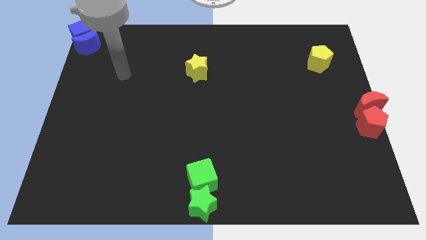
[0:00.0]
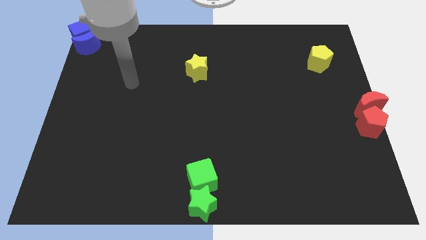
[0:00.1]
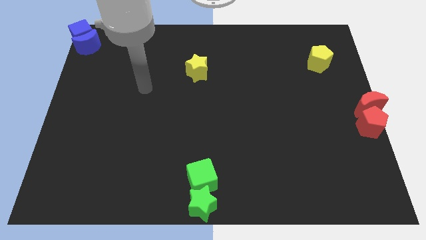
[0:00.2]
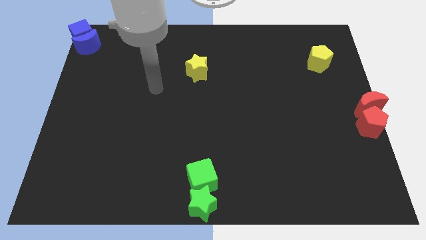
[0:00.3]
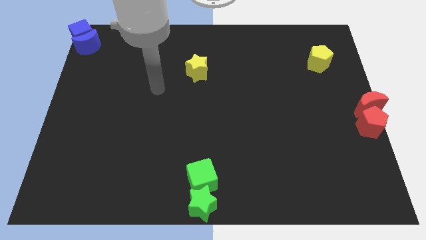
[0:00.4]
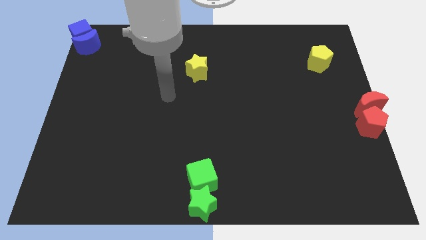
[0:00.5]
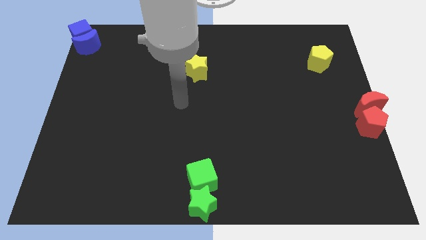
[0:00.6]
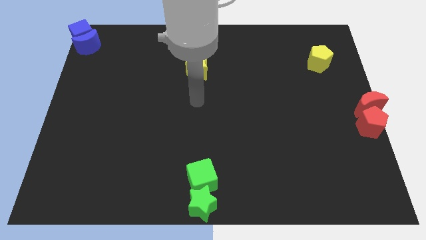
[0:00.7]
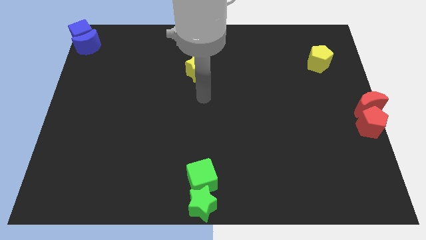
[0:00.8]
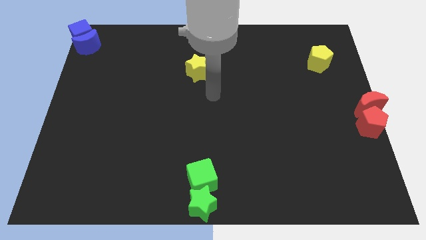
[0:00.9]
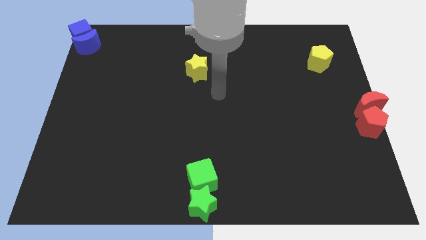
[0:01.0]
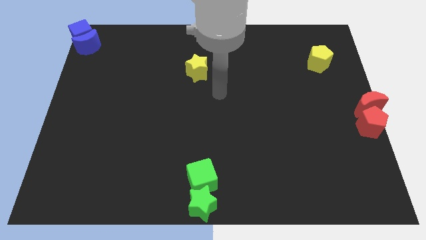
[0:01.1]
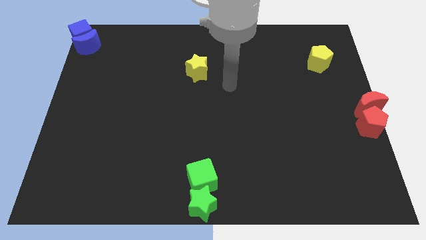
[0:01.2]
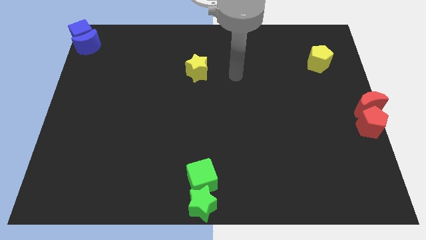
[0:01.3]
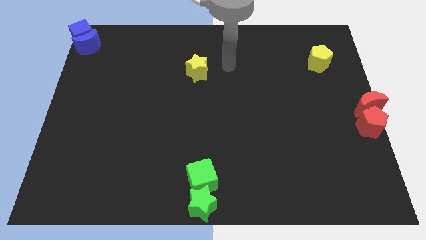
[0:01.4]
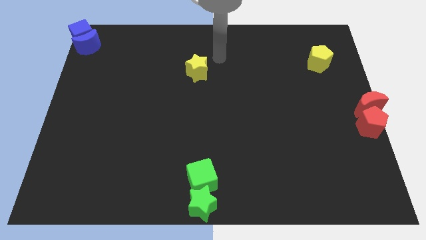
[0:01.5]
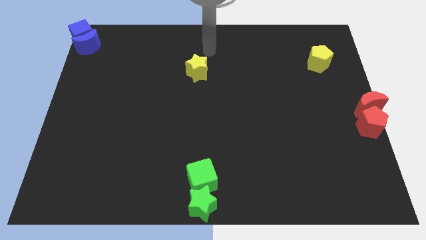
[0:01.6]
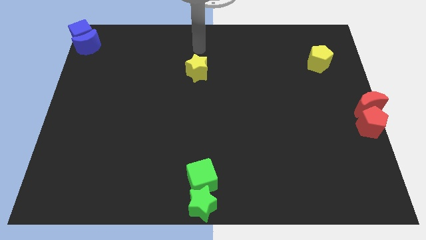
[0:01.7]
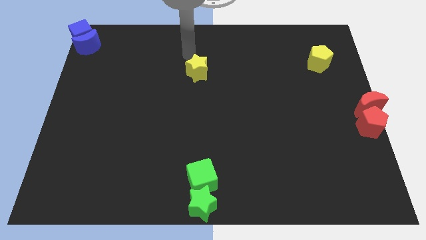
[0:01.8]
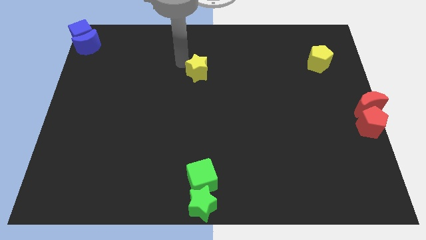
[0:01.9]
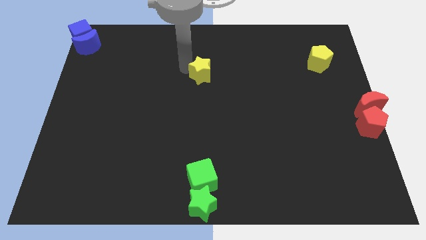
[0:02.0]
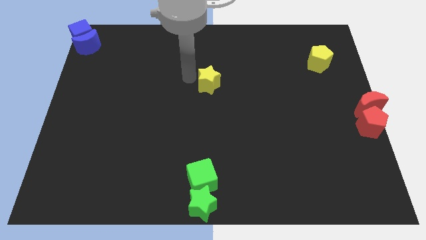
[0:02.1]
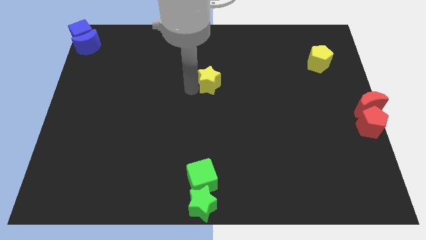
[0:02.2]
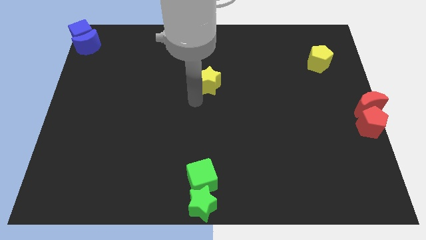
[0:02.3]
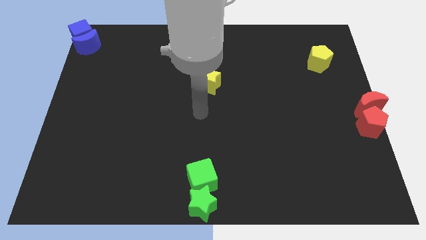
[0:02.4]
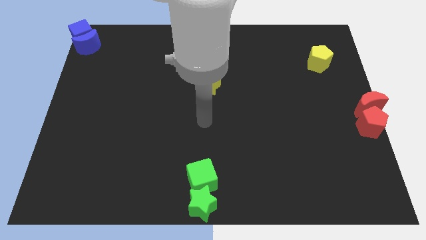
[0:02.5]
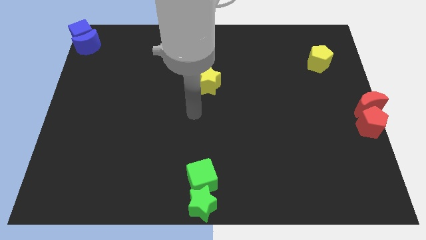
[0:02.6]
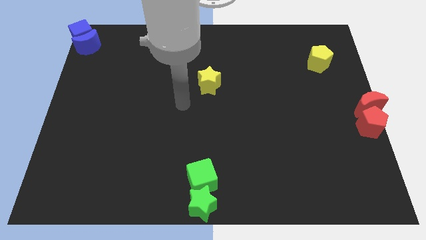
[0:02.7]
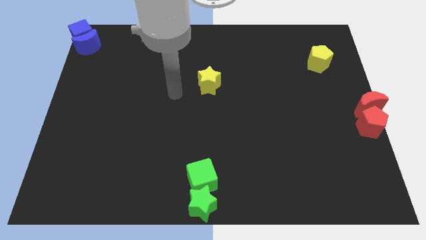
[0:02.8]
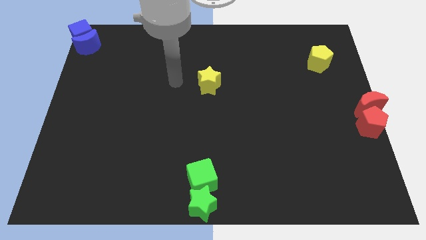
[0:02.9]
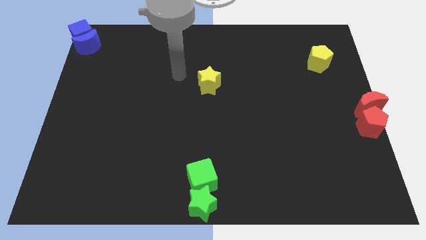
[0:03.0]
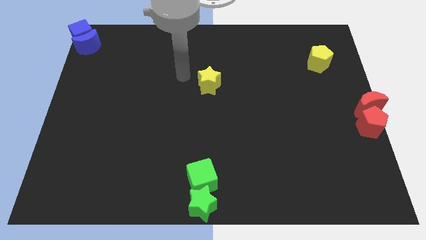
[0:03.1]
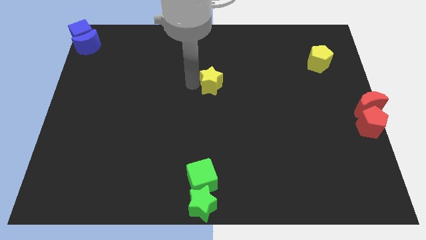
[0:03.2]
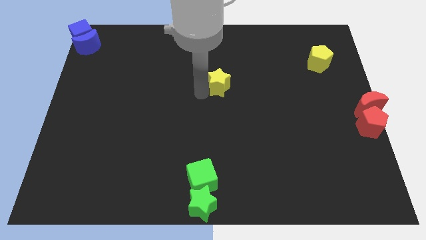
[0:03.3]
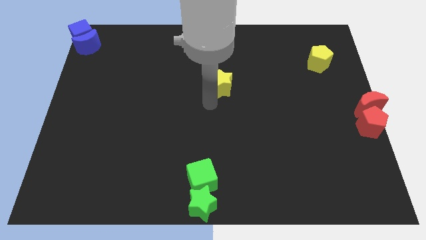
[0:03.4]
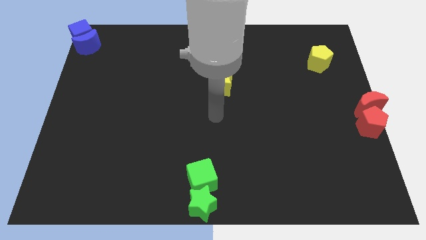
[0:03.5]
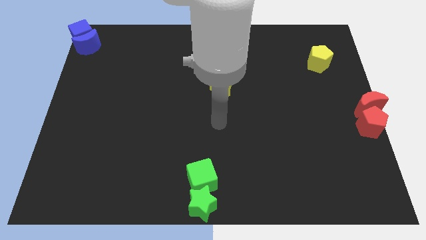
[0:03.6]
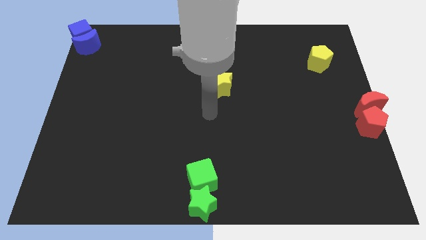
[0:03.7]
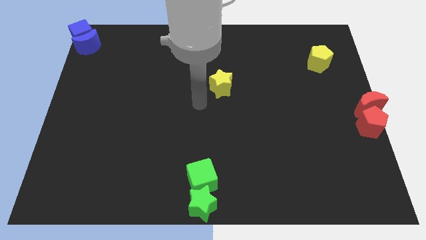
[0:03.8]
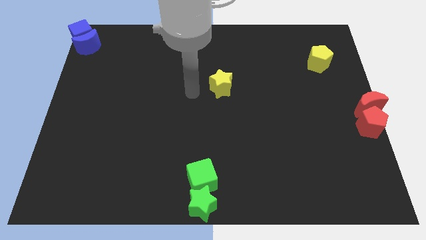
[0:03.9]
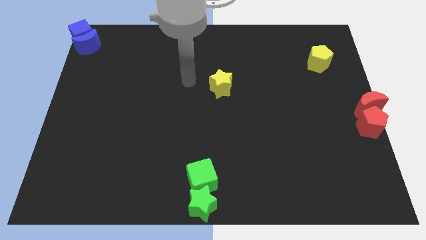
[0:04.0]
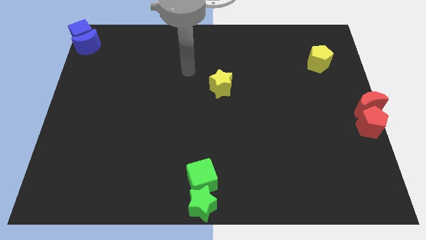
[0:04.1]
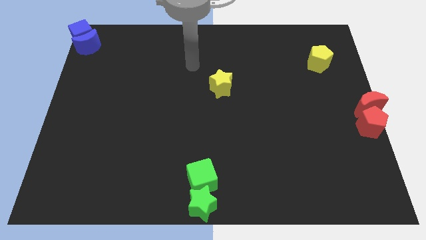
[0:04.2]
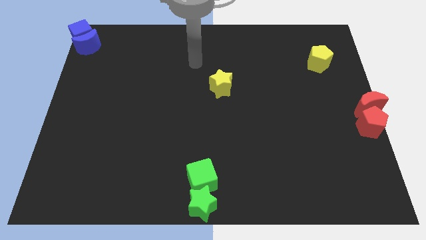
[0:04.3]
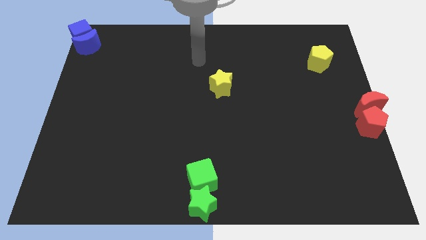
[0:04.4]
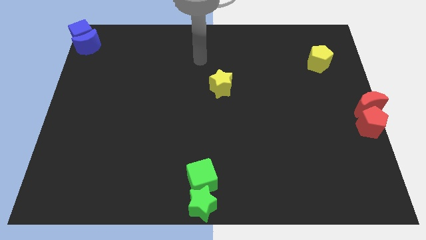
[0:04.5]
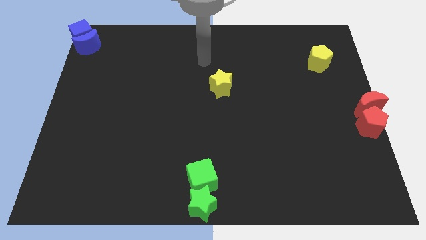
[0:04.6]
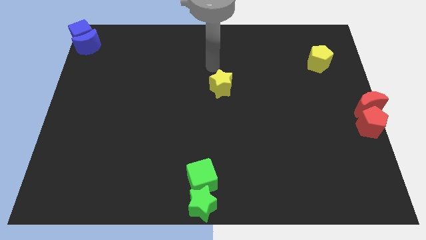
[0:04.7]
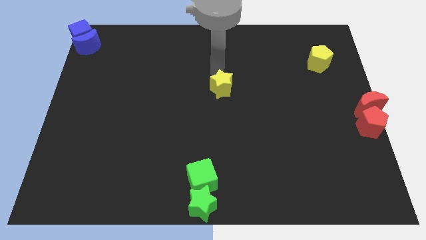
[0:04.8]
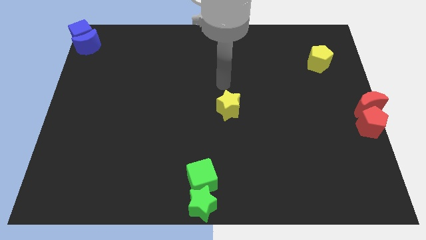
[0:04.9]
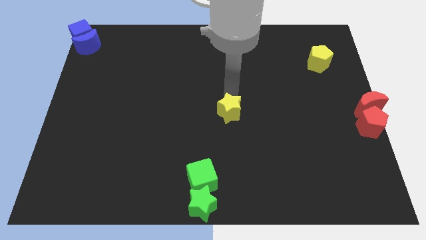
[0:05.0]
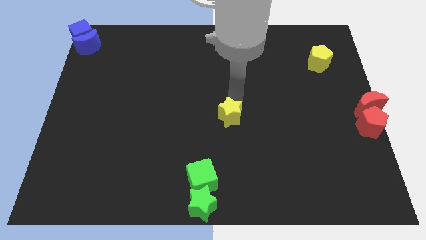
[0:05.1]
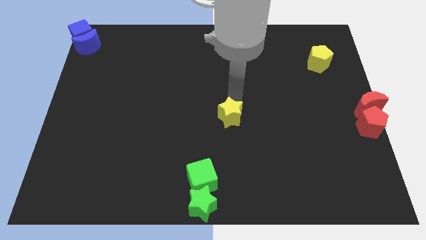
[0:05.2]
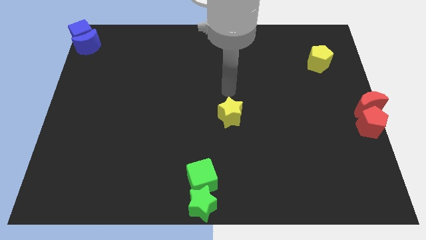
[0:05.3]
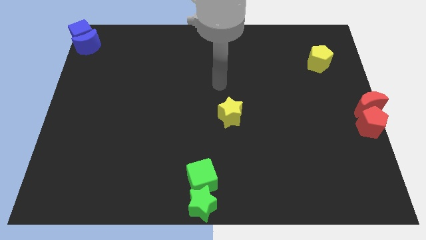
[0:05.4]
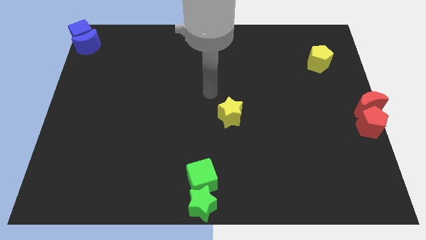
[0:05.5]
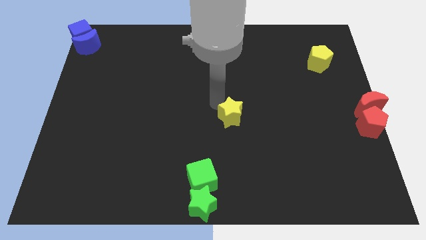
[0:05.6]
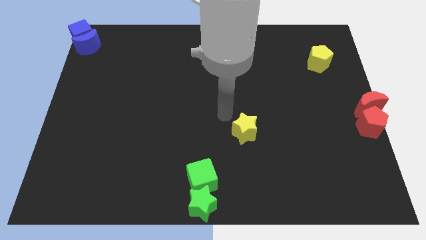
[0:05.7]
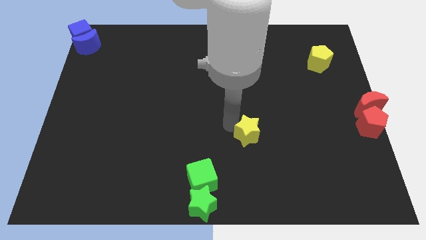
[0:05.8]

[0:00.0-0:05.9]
place the yellow star diagonally in between the yellow pentagon and green cube

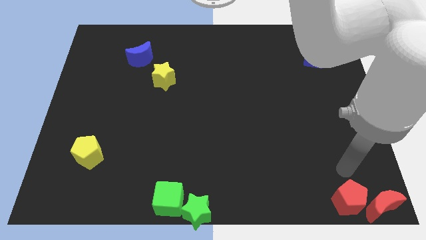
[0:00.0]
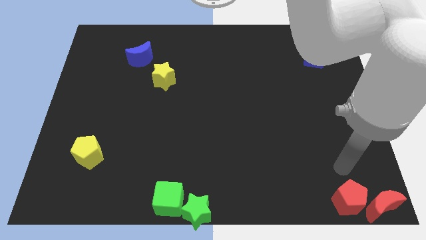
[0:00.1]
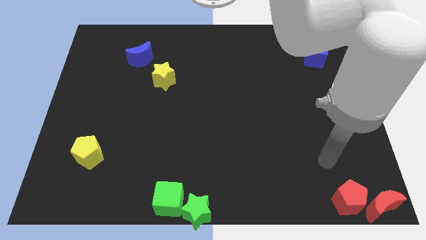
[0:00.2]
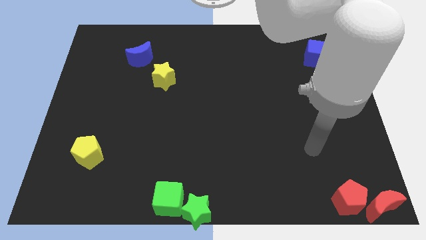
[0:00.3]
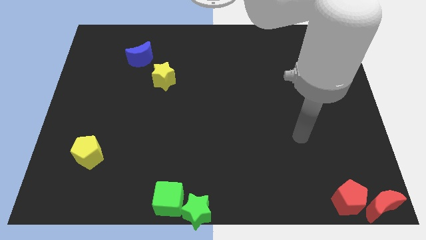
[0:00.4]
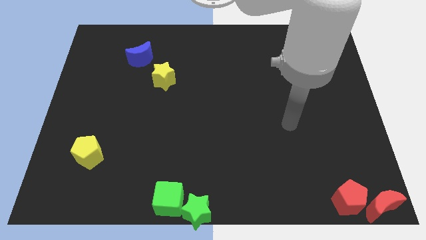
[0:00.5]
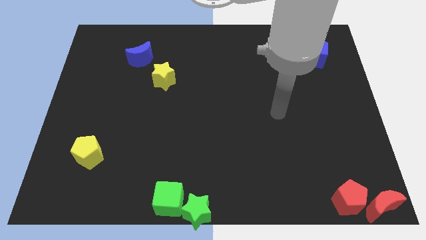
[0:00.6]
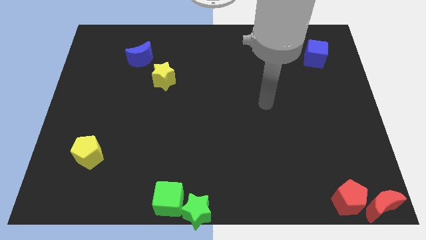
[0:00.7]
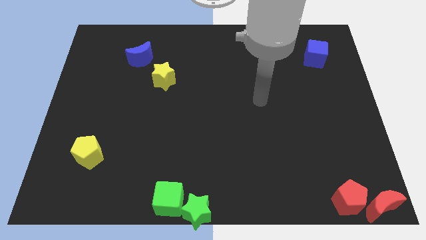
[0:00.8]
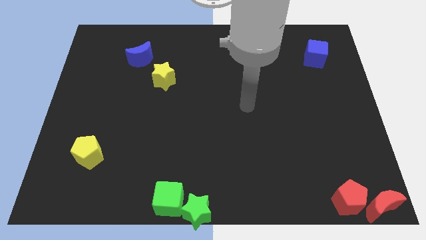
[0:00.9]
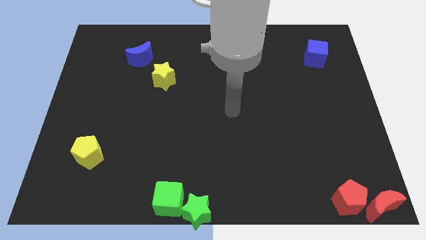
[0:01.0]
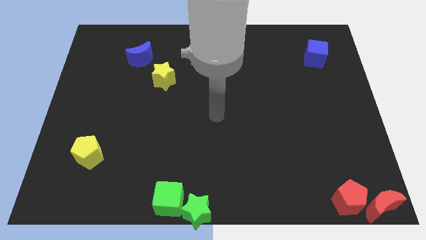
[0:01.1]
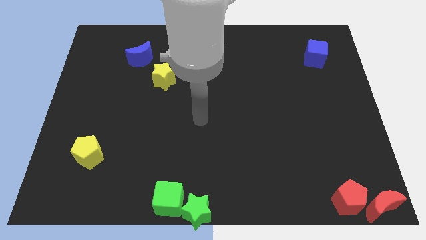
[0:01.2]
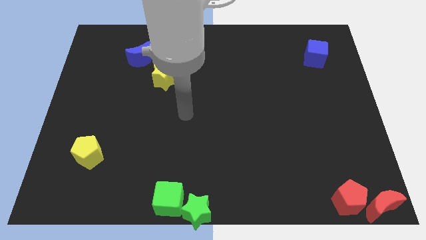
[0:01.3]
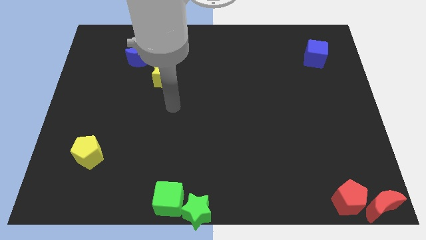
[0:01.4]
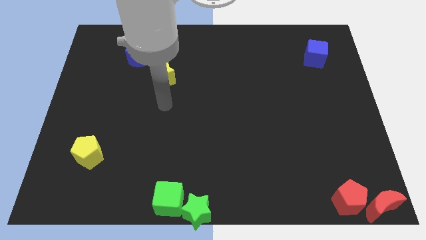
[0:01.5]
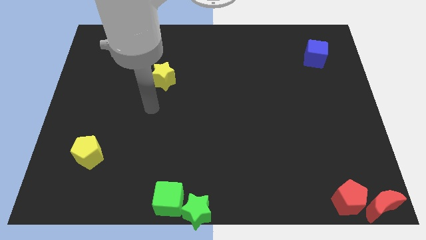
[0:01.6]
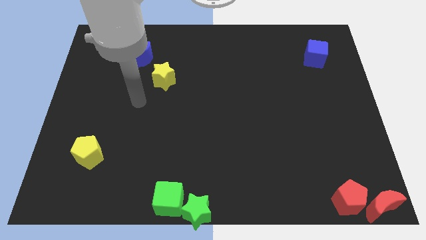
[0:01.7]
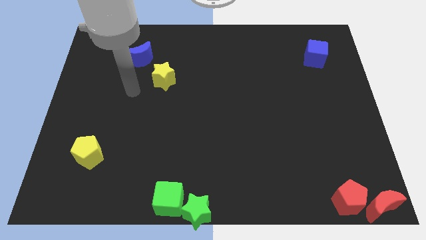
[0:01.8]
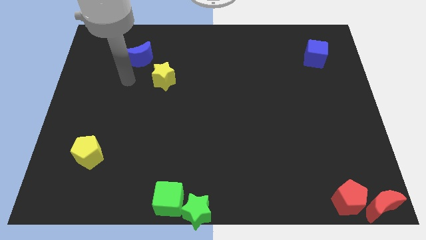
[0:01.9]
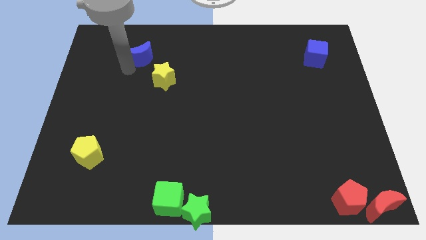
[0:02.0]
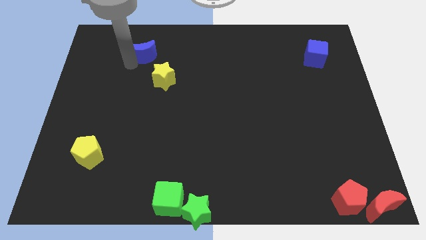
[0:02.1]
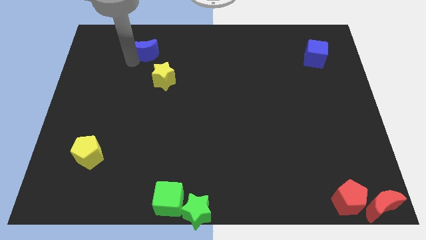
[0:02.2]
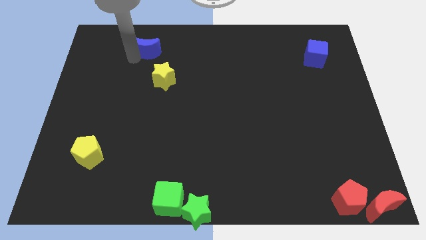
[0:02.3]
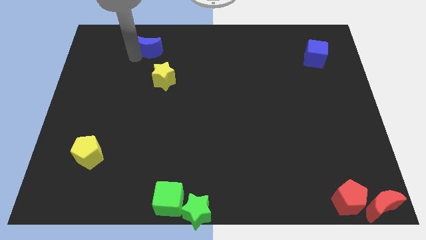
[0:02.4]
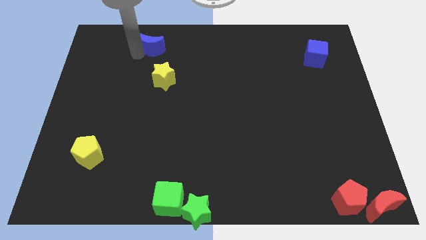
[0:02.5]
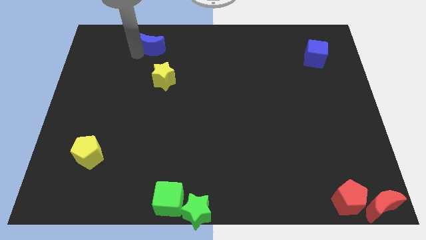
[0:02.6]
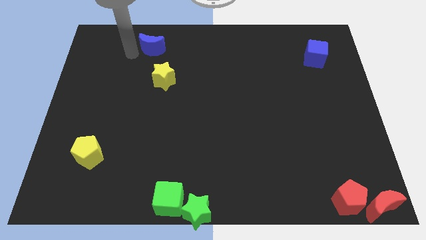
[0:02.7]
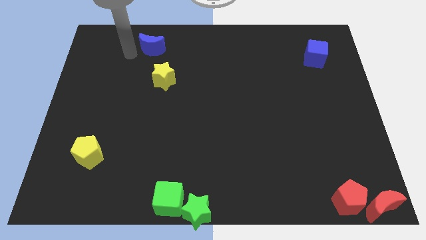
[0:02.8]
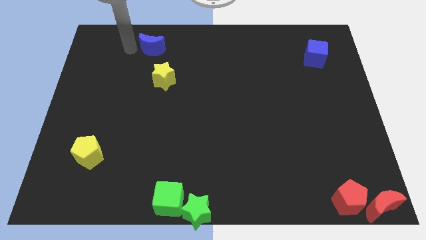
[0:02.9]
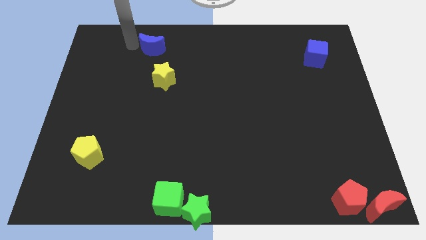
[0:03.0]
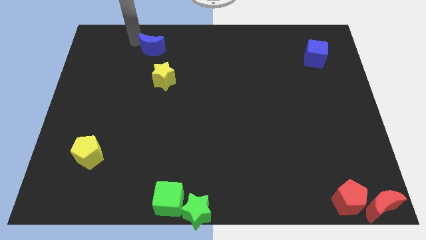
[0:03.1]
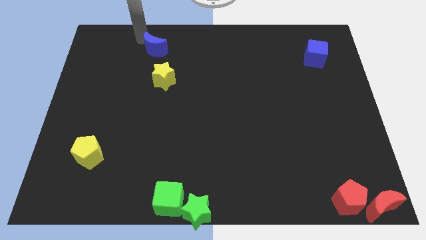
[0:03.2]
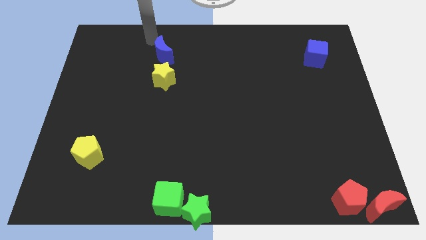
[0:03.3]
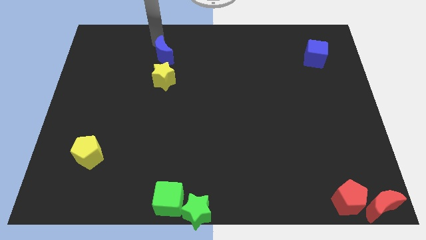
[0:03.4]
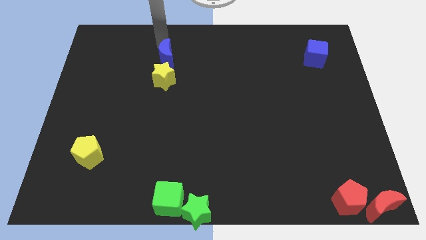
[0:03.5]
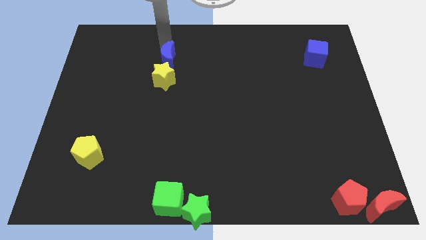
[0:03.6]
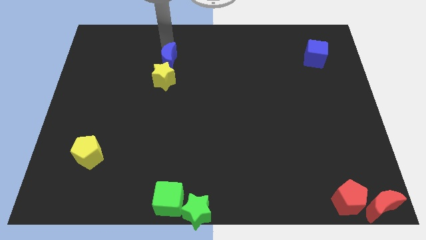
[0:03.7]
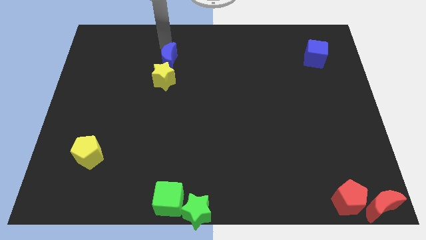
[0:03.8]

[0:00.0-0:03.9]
put the blue moon on the top of the yellow star
